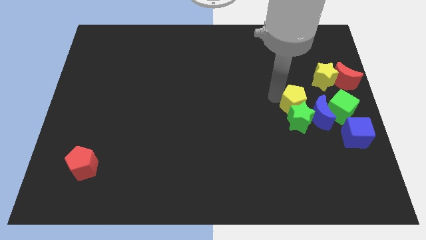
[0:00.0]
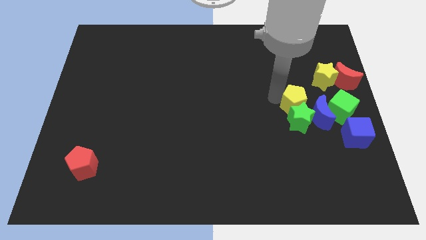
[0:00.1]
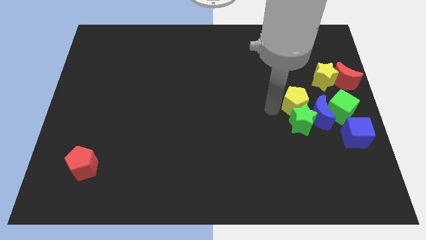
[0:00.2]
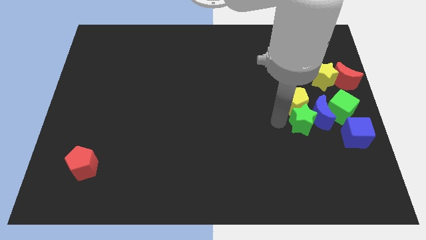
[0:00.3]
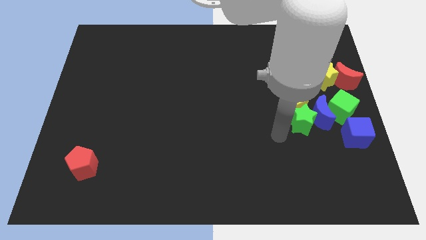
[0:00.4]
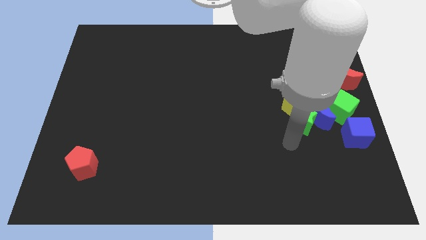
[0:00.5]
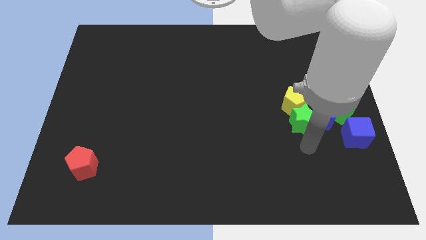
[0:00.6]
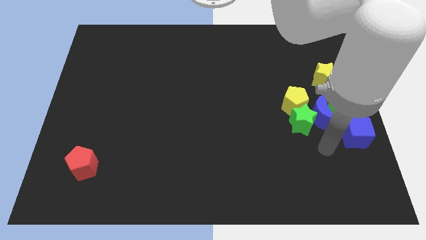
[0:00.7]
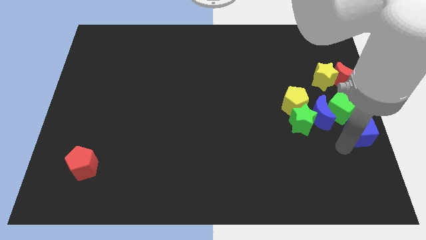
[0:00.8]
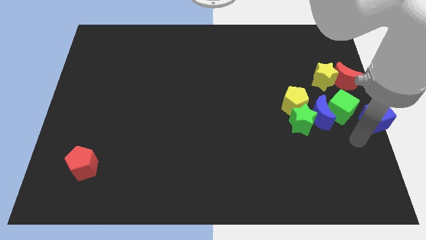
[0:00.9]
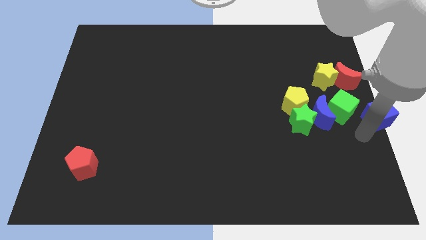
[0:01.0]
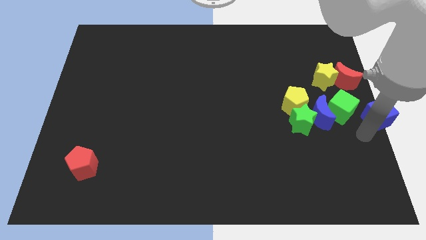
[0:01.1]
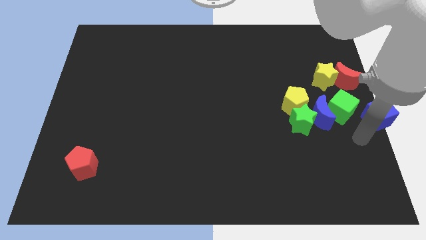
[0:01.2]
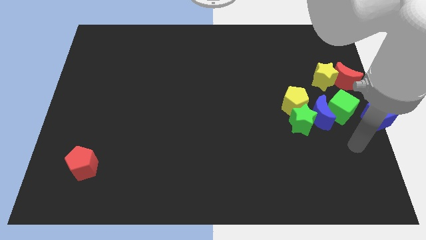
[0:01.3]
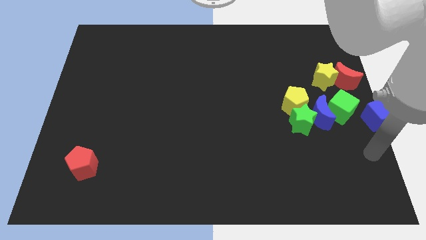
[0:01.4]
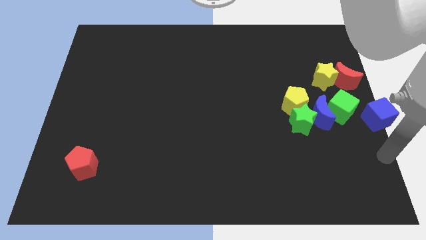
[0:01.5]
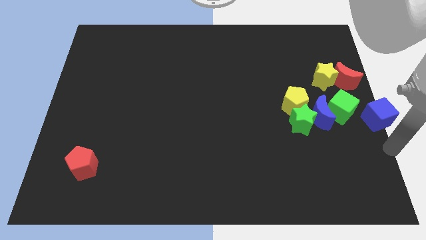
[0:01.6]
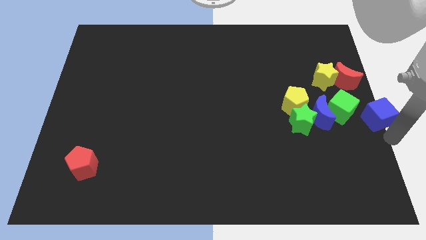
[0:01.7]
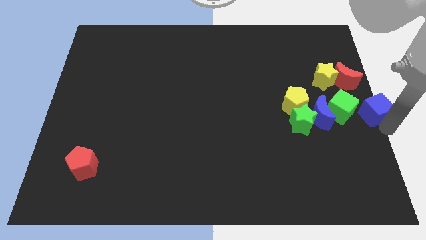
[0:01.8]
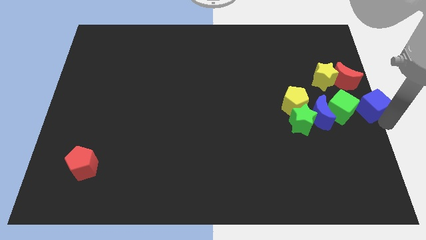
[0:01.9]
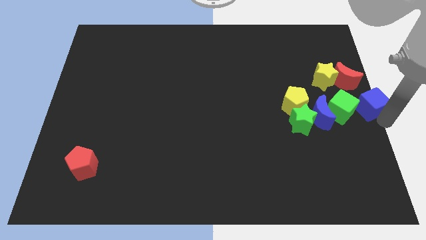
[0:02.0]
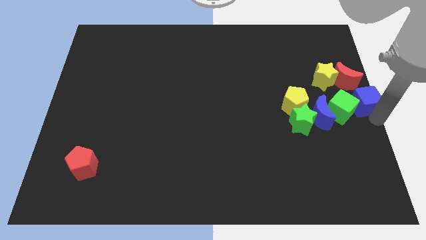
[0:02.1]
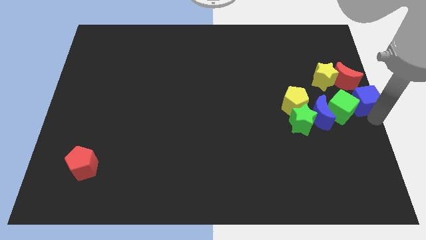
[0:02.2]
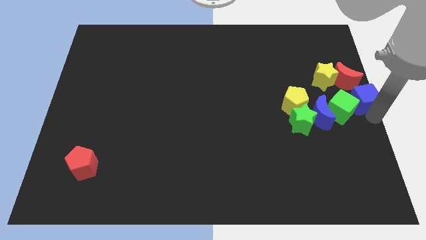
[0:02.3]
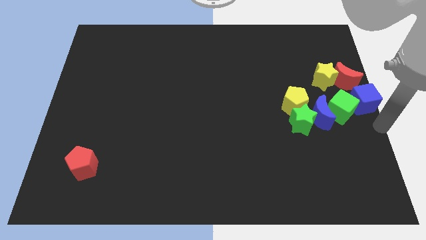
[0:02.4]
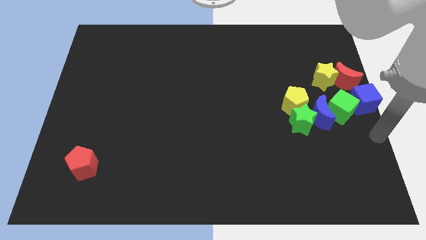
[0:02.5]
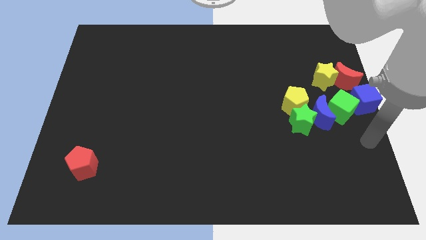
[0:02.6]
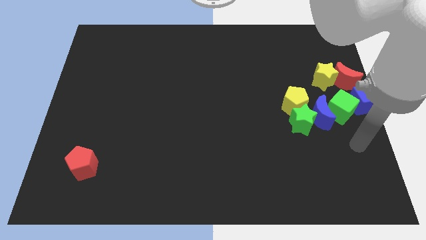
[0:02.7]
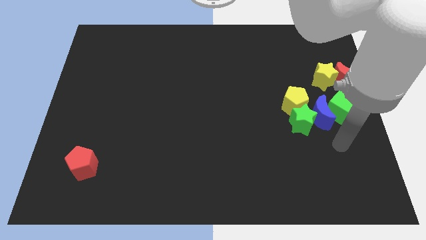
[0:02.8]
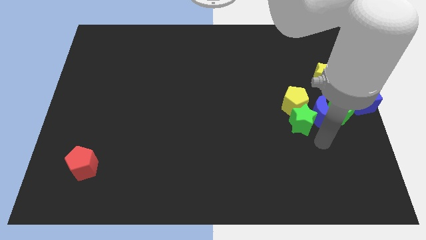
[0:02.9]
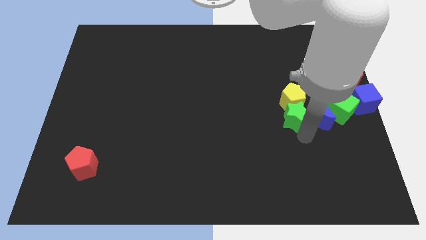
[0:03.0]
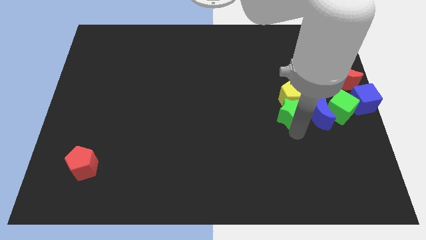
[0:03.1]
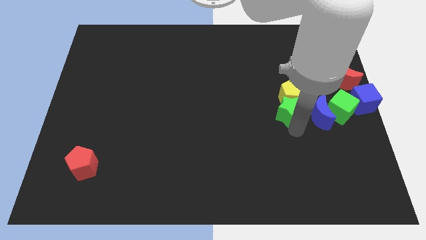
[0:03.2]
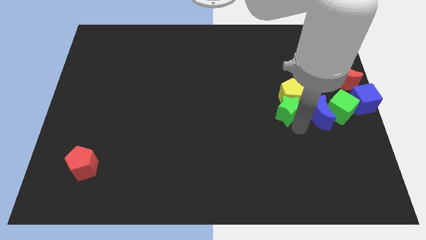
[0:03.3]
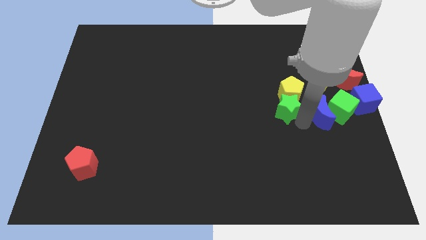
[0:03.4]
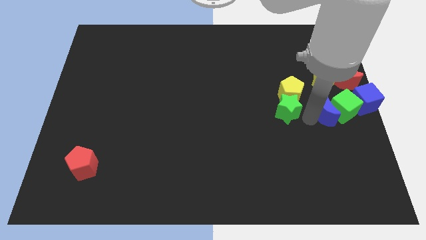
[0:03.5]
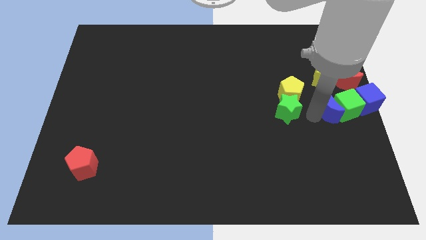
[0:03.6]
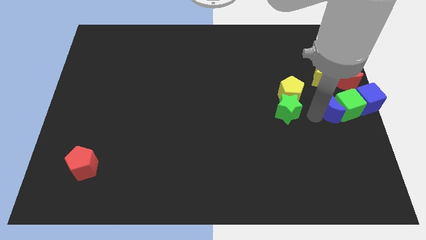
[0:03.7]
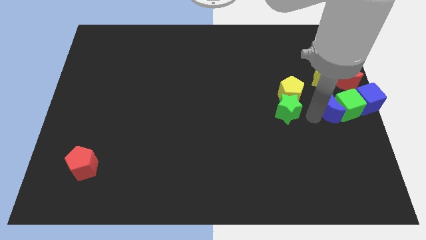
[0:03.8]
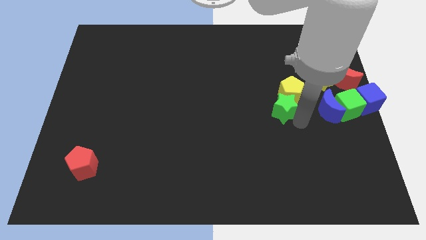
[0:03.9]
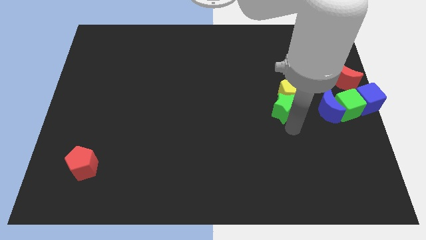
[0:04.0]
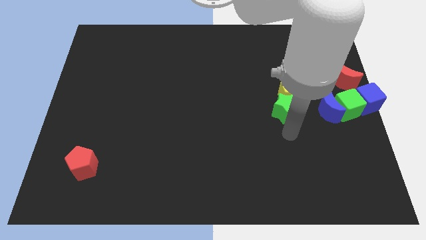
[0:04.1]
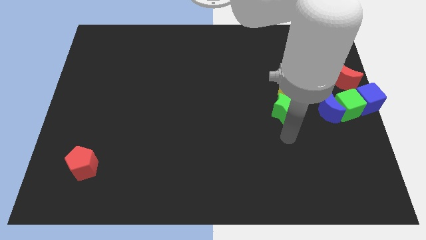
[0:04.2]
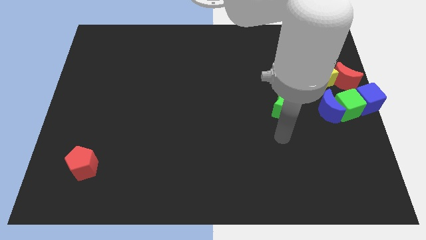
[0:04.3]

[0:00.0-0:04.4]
separate the group of blocks from the green star and the yellow pentagon

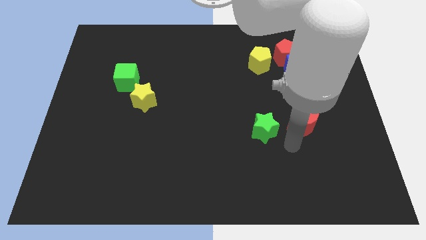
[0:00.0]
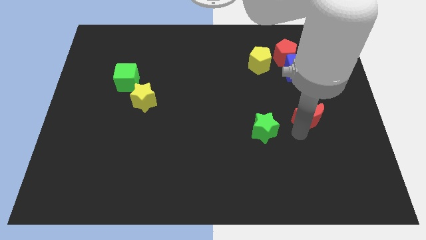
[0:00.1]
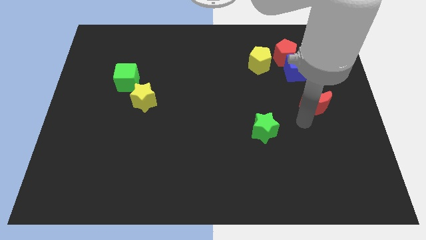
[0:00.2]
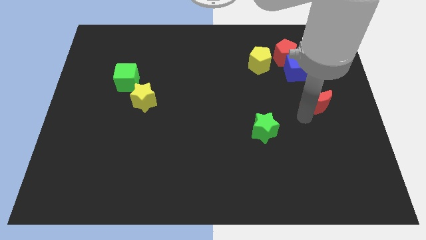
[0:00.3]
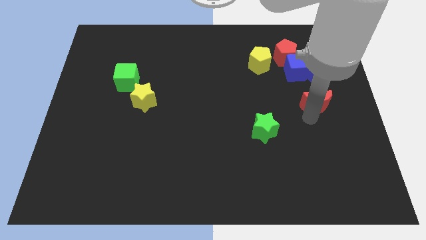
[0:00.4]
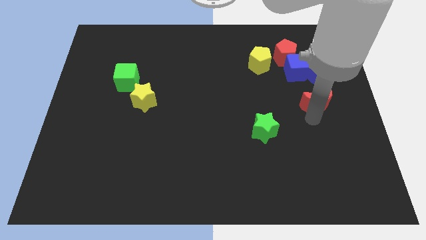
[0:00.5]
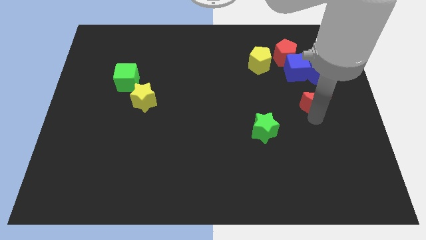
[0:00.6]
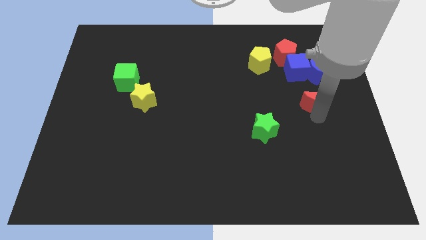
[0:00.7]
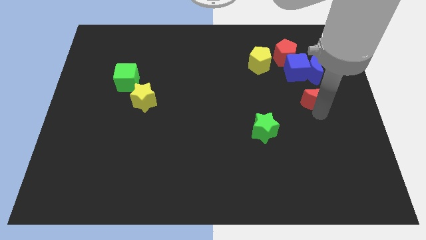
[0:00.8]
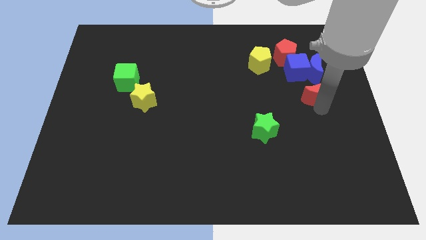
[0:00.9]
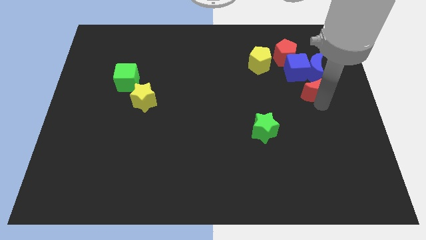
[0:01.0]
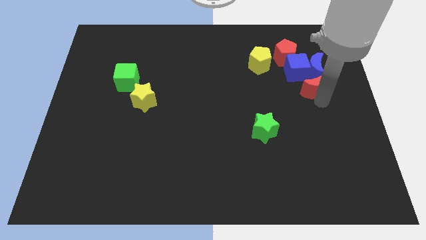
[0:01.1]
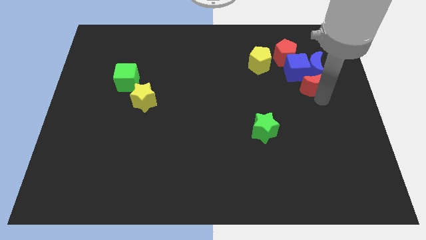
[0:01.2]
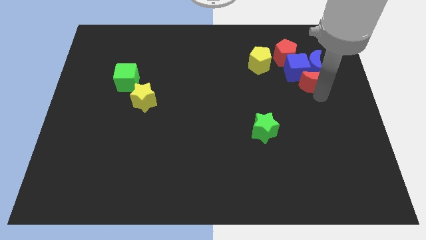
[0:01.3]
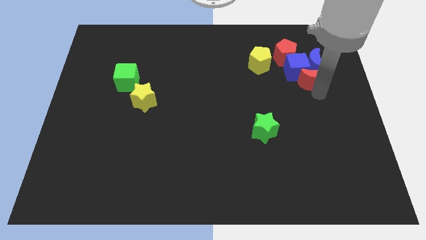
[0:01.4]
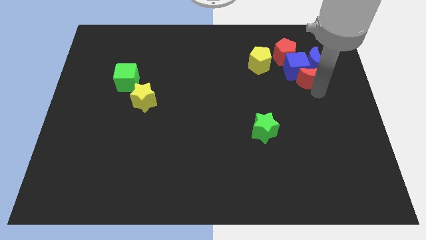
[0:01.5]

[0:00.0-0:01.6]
place the red crescent below the blue blocks

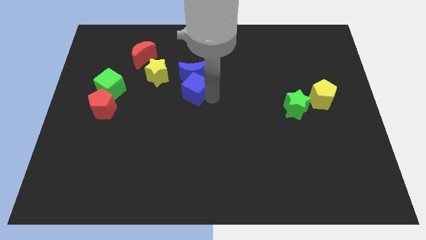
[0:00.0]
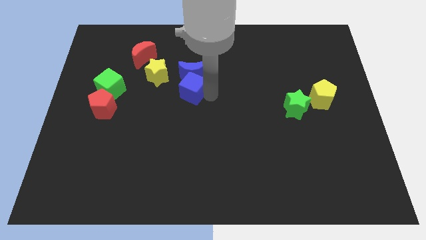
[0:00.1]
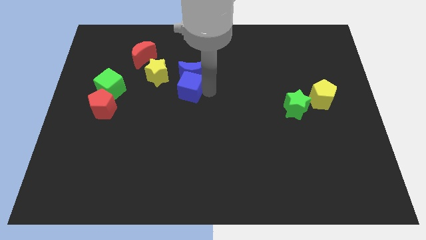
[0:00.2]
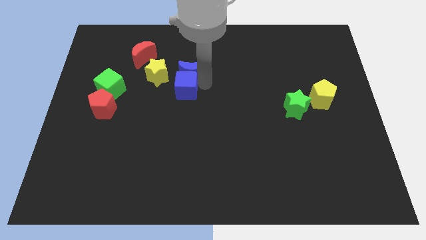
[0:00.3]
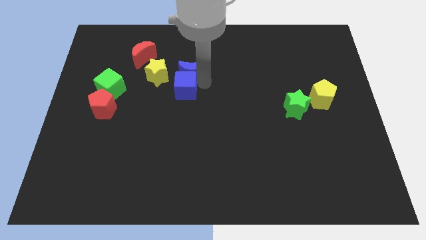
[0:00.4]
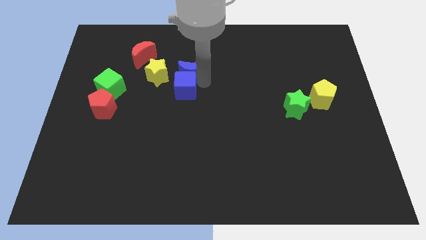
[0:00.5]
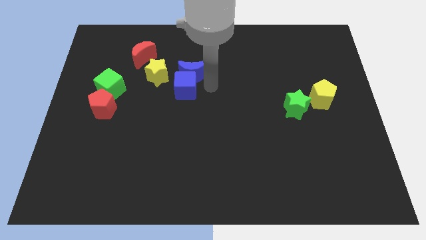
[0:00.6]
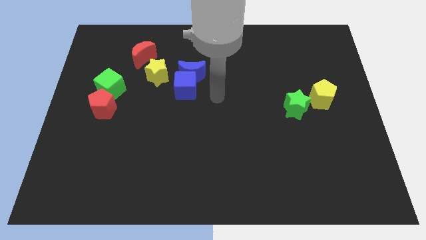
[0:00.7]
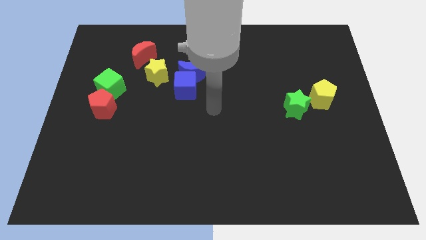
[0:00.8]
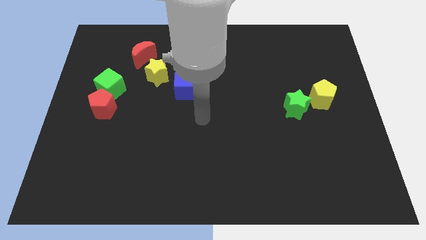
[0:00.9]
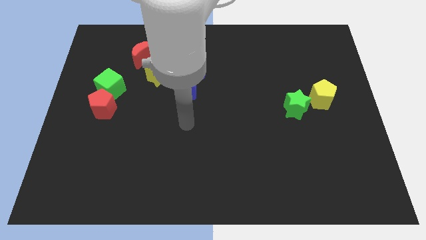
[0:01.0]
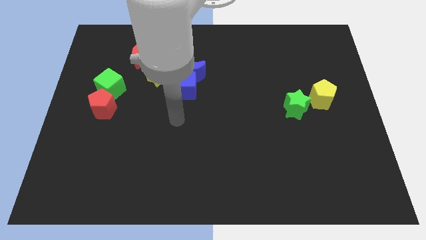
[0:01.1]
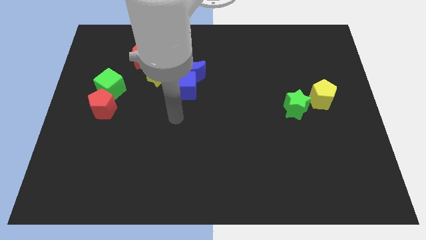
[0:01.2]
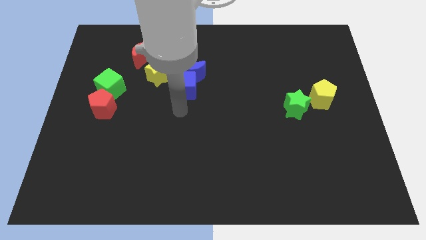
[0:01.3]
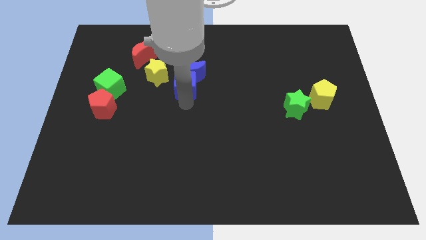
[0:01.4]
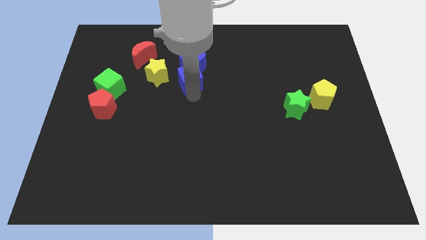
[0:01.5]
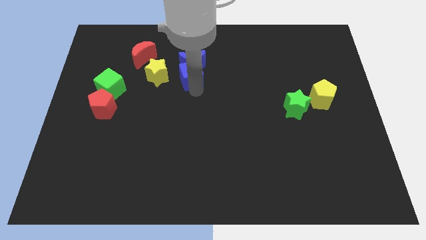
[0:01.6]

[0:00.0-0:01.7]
push the blue blocks slightly to the top

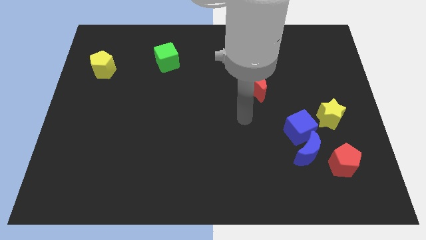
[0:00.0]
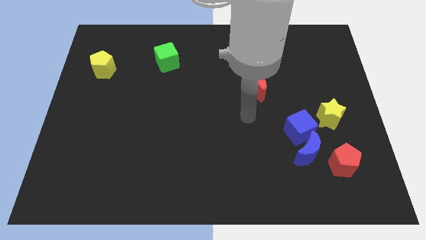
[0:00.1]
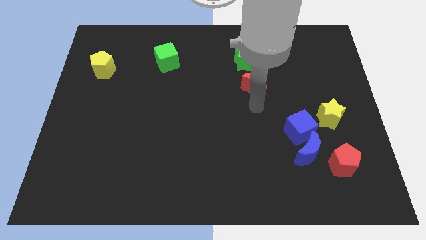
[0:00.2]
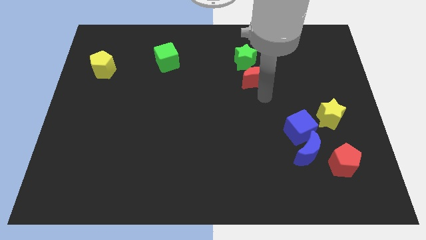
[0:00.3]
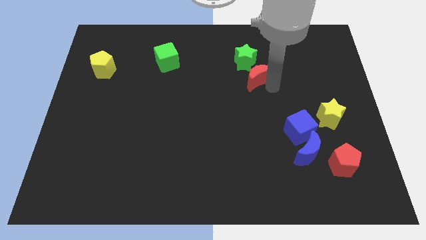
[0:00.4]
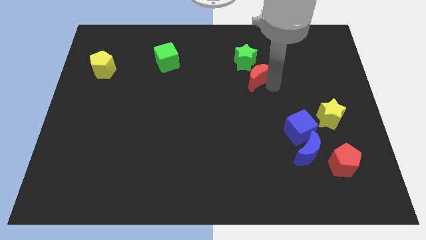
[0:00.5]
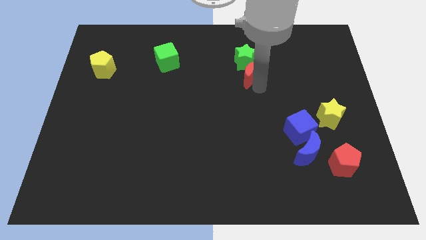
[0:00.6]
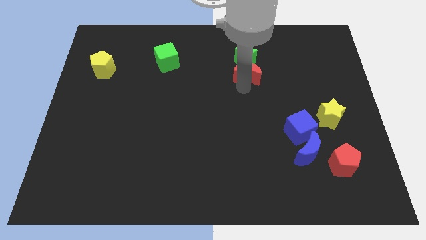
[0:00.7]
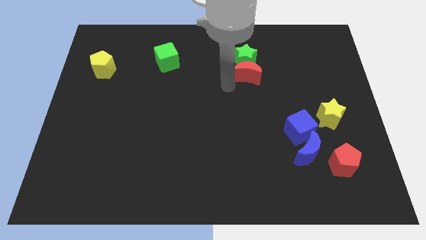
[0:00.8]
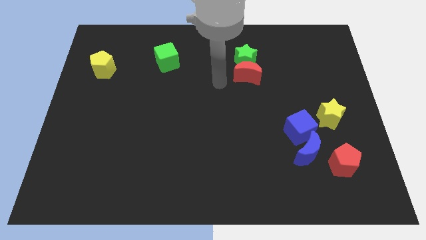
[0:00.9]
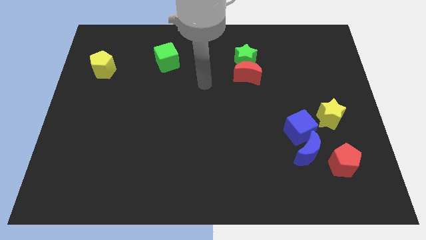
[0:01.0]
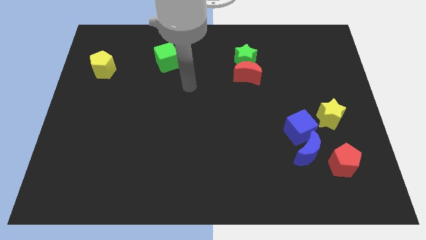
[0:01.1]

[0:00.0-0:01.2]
place the red crescent below the green star

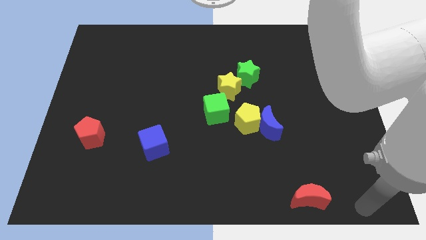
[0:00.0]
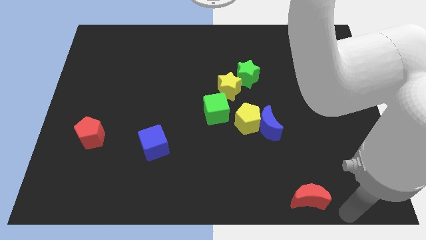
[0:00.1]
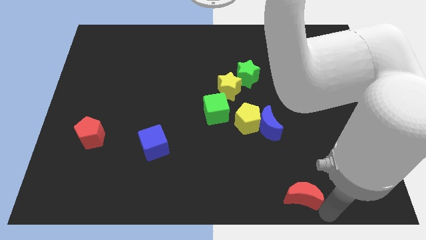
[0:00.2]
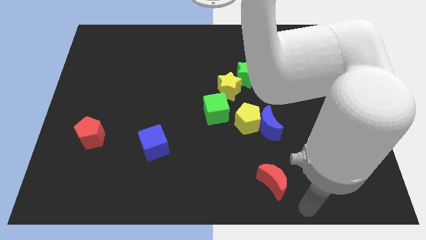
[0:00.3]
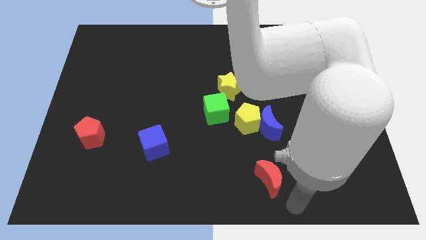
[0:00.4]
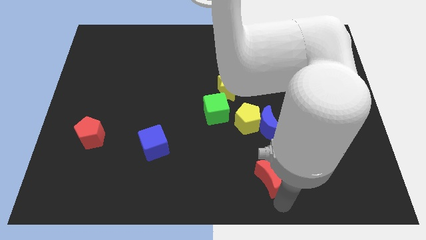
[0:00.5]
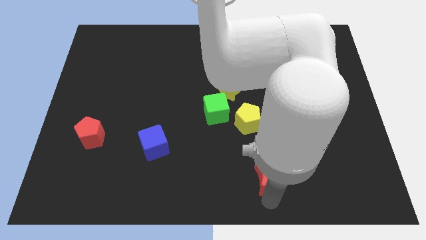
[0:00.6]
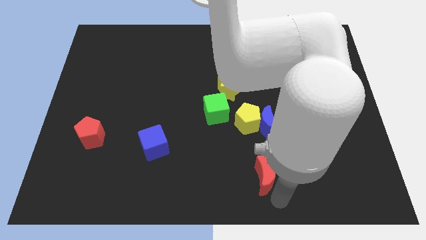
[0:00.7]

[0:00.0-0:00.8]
place the red moon below the blue moon
